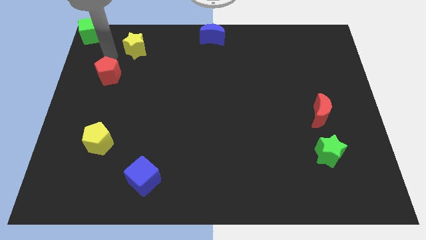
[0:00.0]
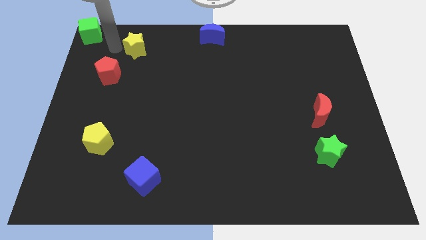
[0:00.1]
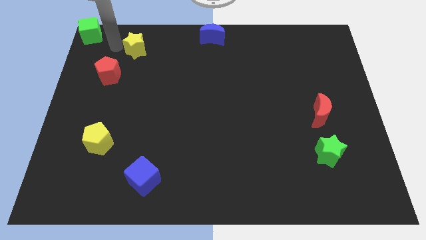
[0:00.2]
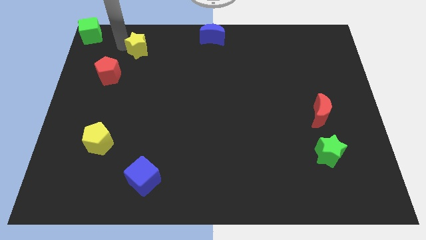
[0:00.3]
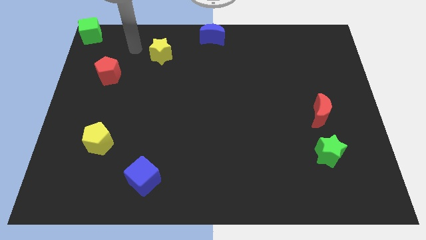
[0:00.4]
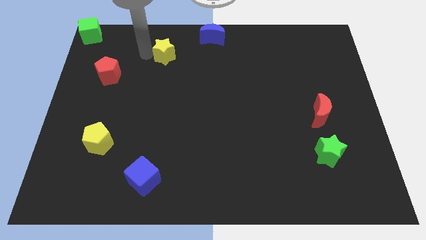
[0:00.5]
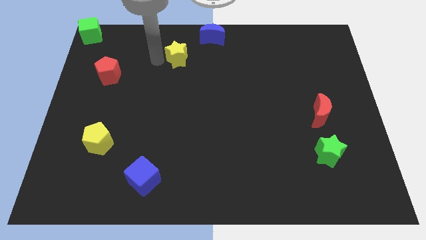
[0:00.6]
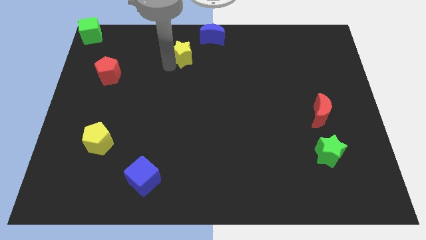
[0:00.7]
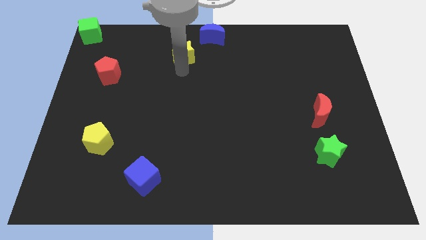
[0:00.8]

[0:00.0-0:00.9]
push the yellow star in between red pentagon blue crescent

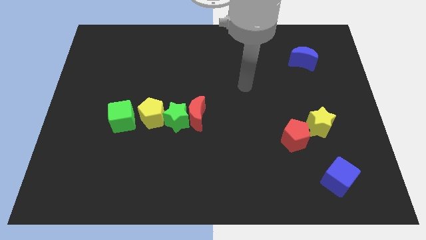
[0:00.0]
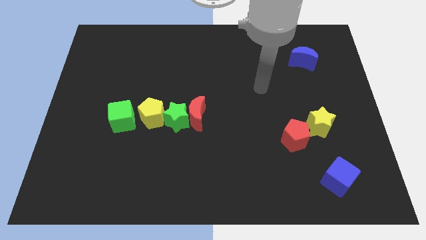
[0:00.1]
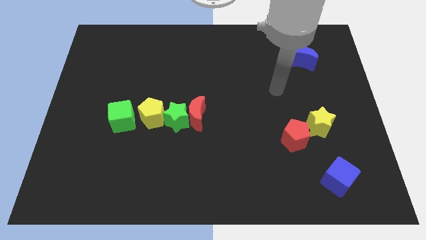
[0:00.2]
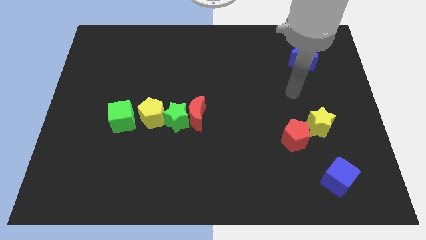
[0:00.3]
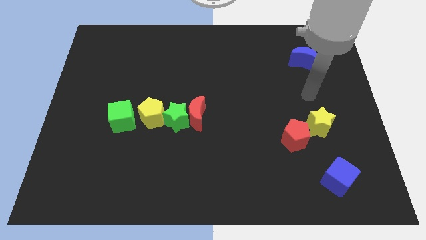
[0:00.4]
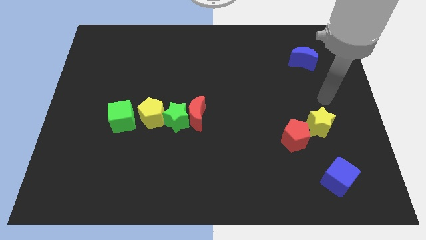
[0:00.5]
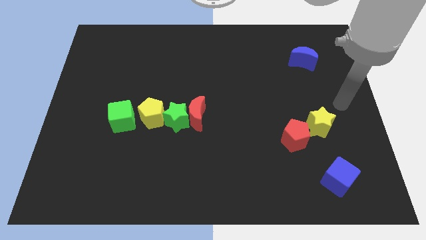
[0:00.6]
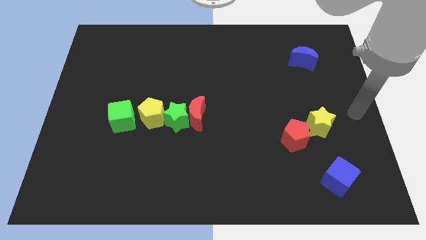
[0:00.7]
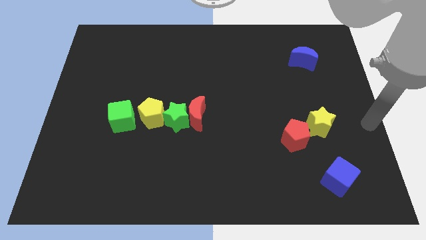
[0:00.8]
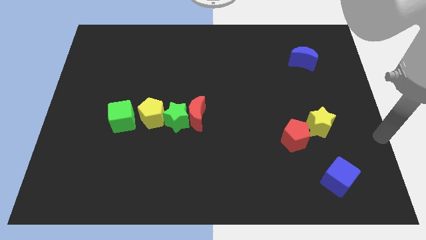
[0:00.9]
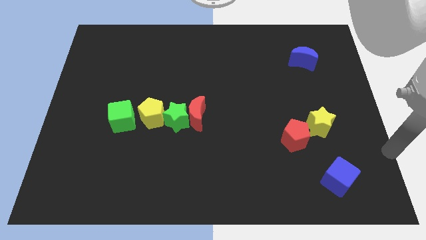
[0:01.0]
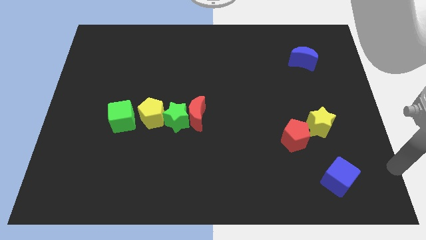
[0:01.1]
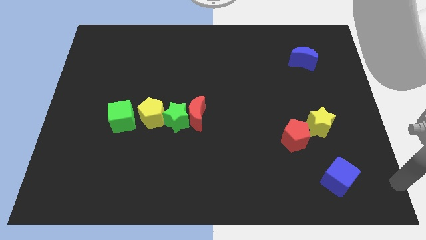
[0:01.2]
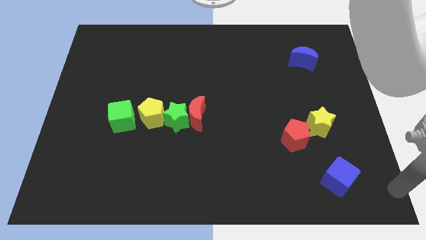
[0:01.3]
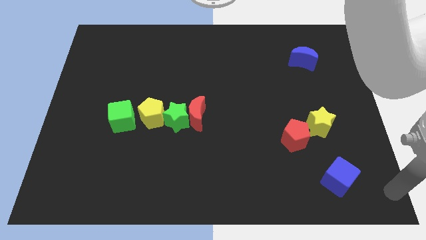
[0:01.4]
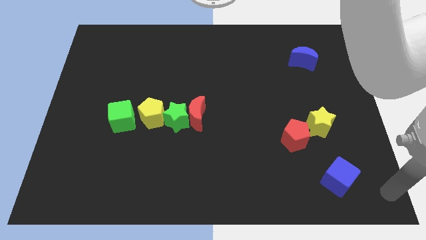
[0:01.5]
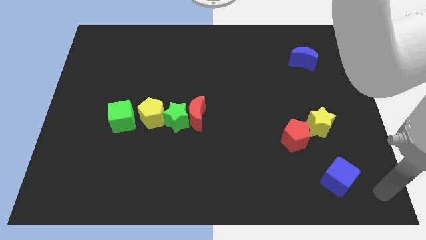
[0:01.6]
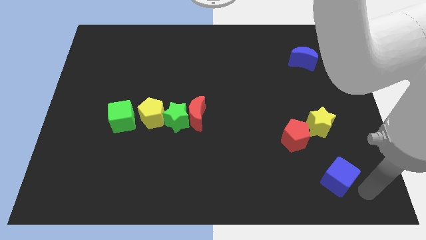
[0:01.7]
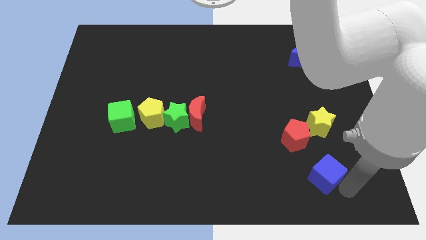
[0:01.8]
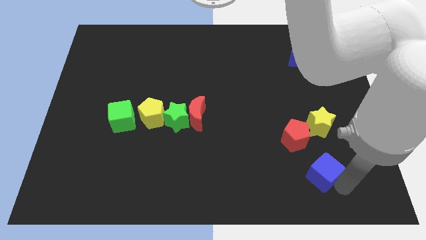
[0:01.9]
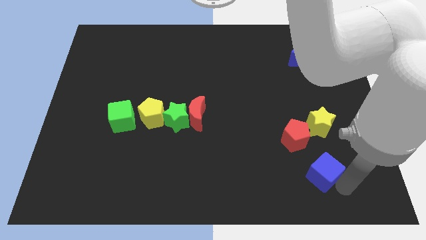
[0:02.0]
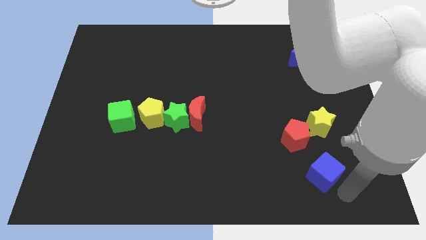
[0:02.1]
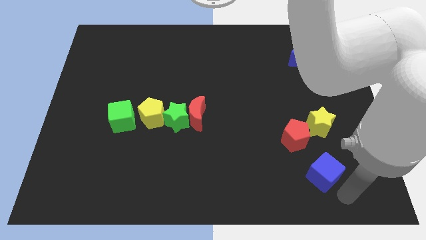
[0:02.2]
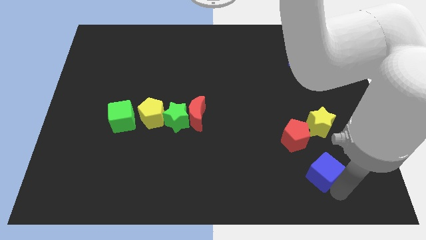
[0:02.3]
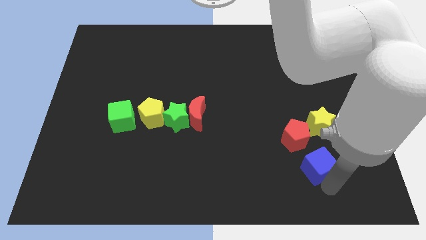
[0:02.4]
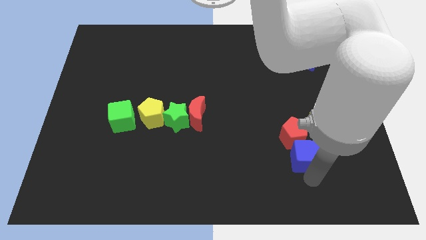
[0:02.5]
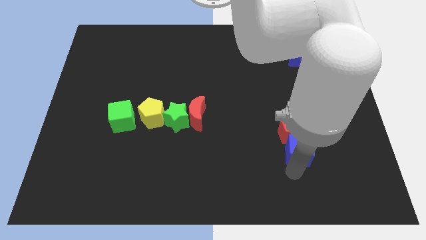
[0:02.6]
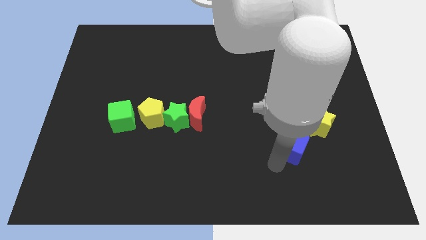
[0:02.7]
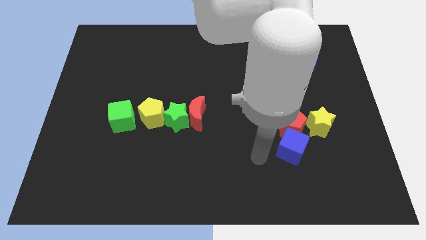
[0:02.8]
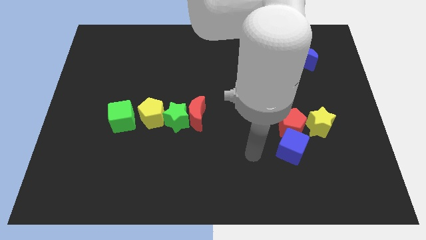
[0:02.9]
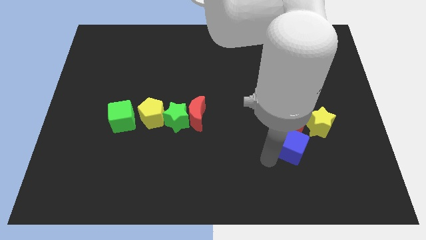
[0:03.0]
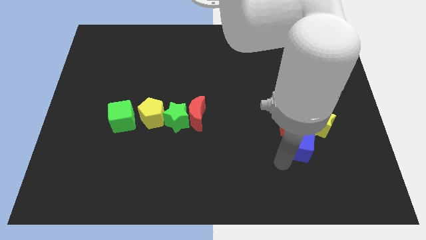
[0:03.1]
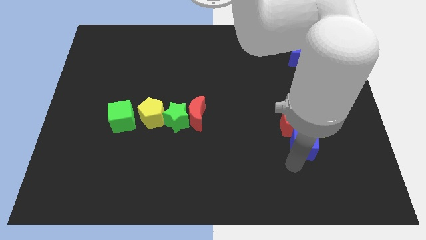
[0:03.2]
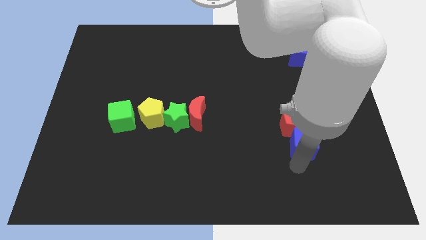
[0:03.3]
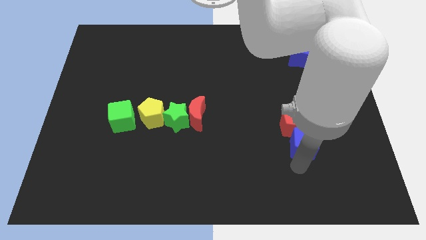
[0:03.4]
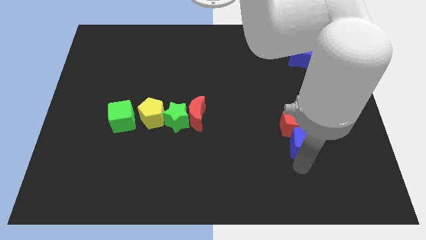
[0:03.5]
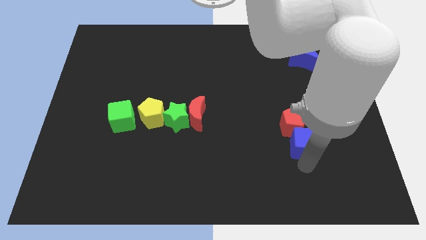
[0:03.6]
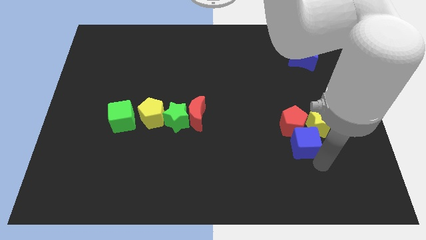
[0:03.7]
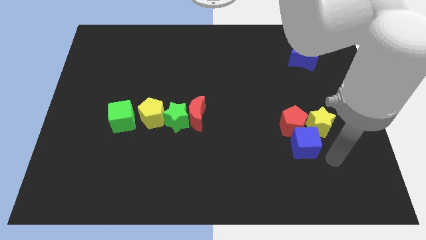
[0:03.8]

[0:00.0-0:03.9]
push the blue cube at the bottom of the red pentagon and yellow star

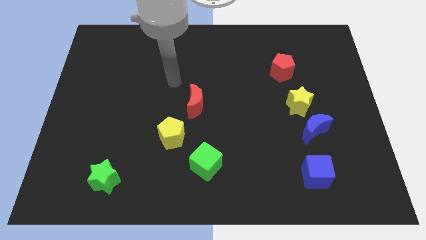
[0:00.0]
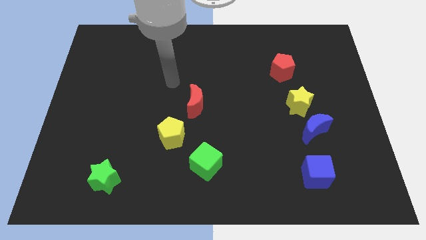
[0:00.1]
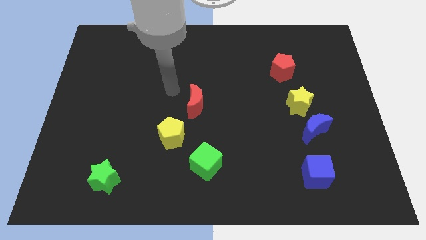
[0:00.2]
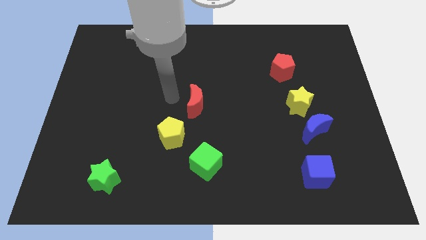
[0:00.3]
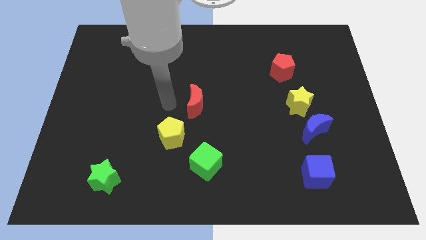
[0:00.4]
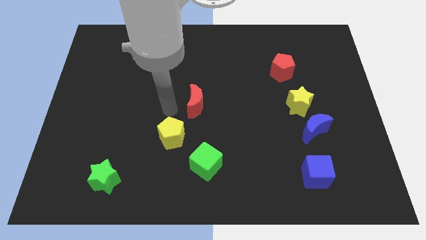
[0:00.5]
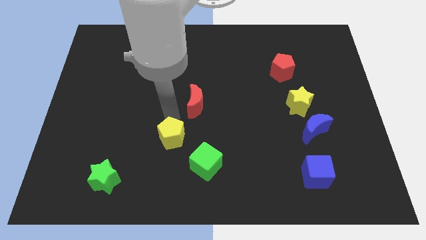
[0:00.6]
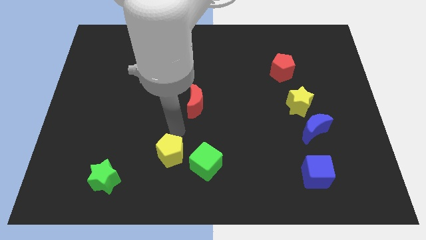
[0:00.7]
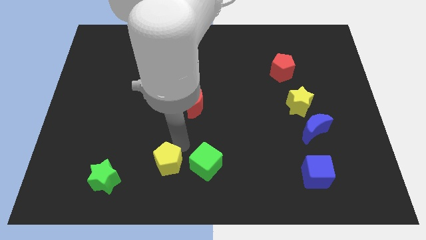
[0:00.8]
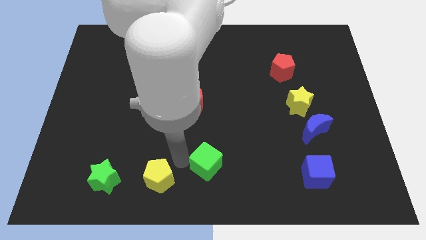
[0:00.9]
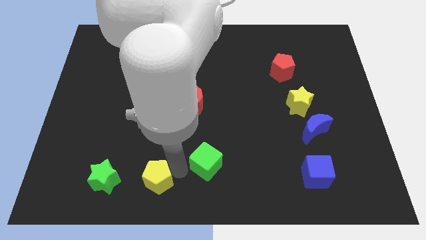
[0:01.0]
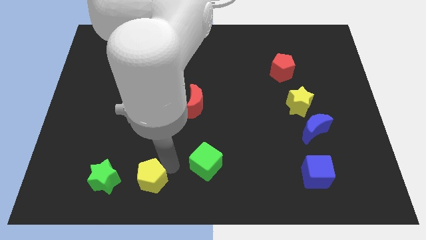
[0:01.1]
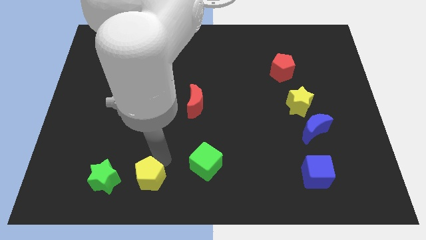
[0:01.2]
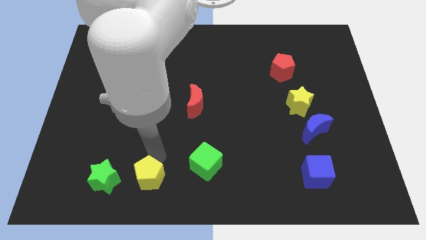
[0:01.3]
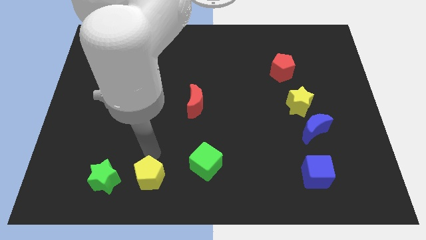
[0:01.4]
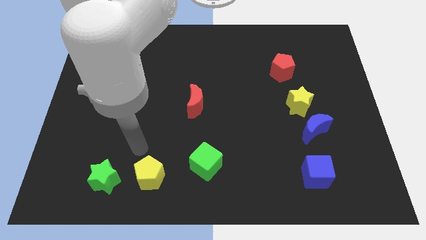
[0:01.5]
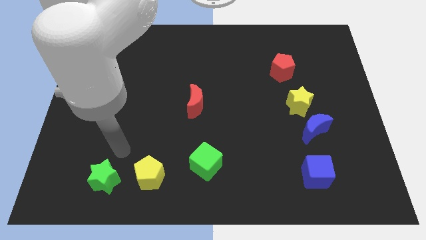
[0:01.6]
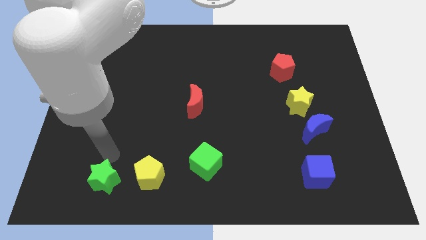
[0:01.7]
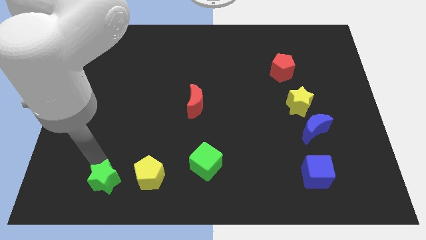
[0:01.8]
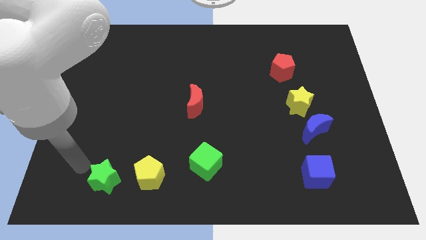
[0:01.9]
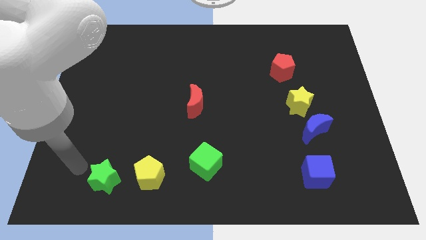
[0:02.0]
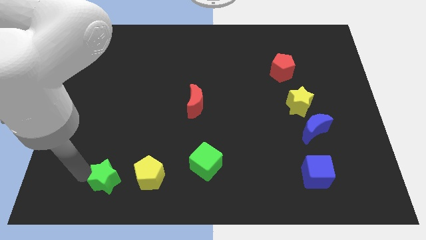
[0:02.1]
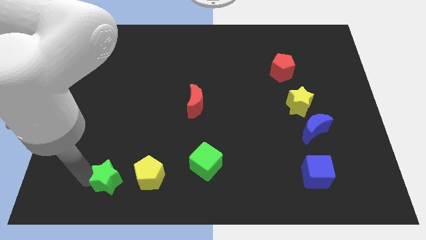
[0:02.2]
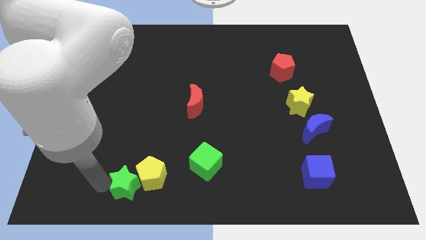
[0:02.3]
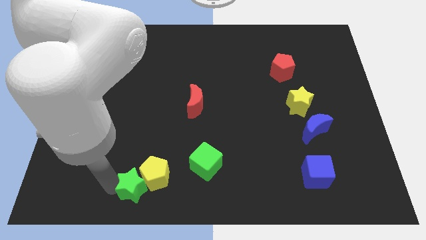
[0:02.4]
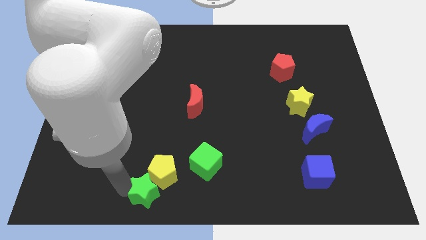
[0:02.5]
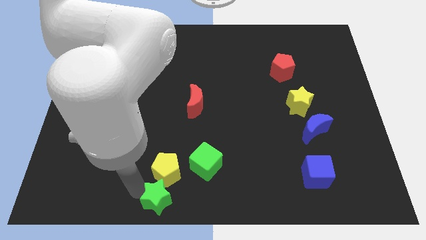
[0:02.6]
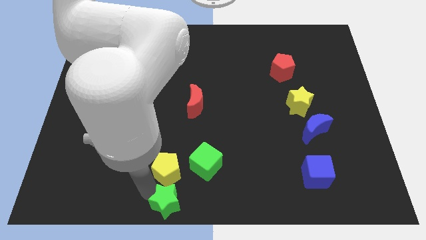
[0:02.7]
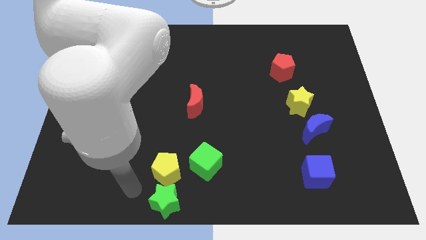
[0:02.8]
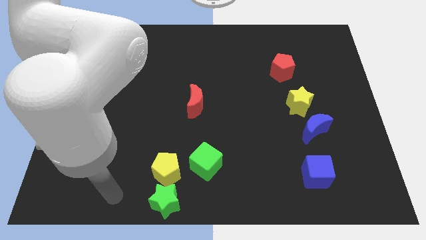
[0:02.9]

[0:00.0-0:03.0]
drag the yellow pentagon and green star close to each other

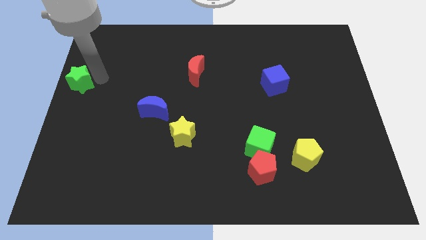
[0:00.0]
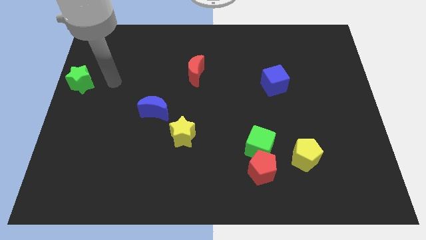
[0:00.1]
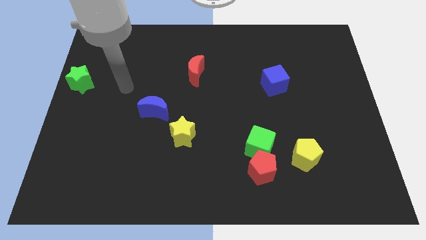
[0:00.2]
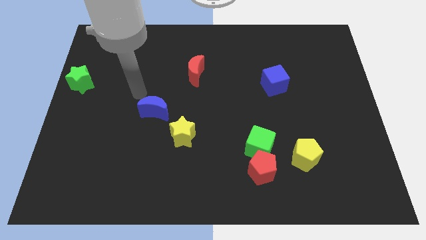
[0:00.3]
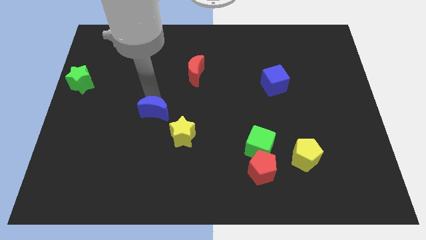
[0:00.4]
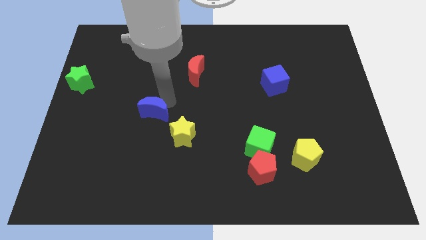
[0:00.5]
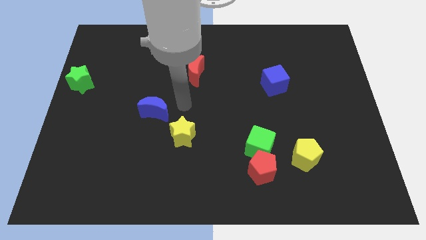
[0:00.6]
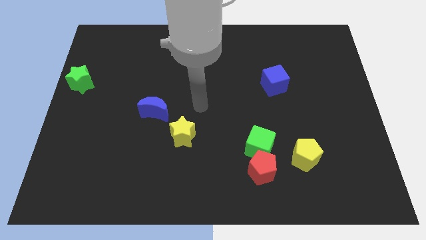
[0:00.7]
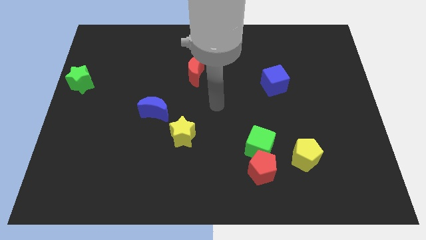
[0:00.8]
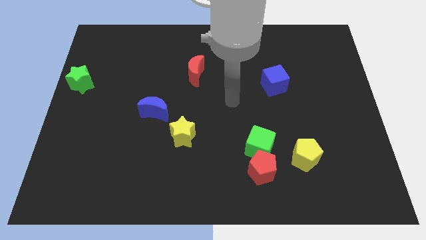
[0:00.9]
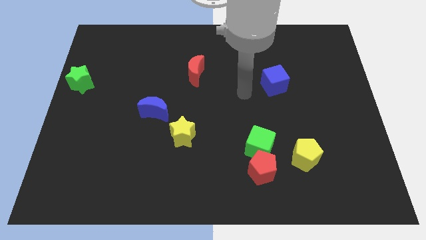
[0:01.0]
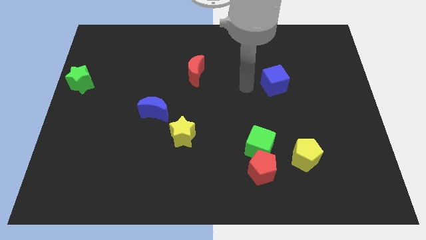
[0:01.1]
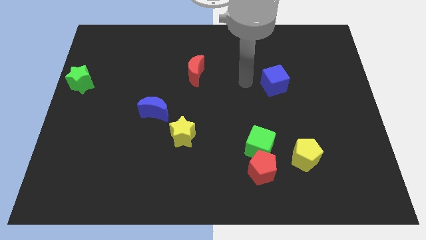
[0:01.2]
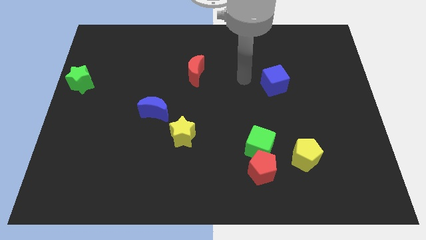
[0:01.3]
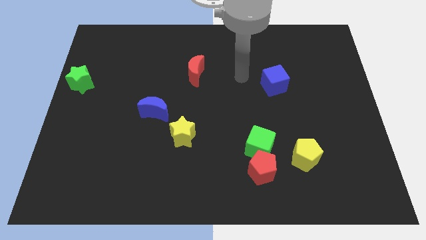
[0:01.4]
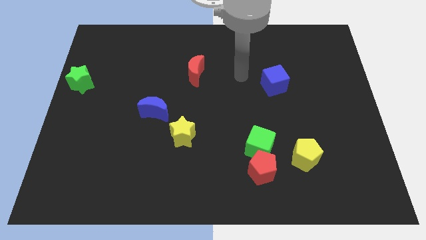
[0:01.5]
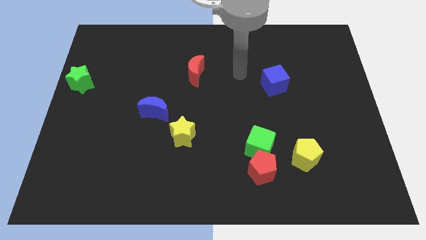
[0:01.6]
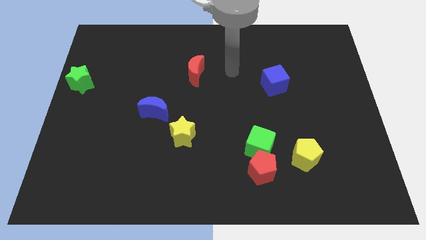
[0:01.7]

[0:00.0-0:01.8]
move away from the green star
